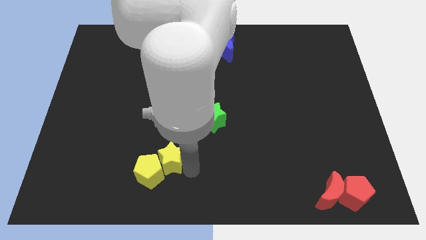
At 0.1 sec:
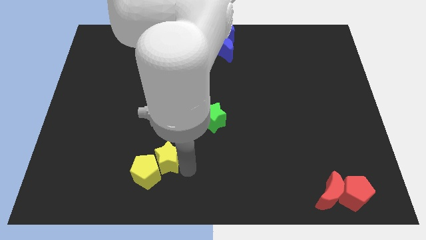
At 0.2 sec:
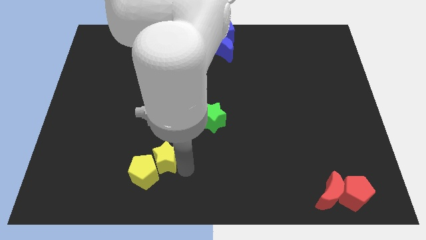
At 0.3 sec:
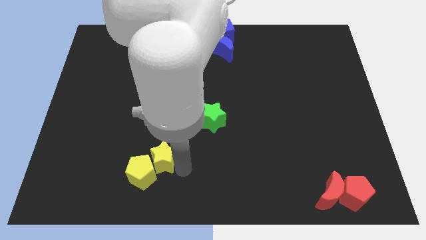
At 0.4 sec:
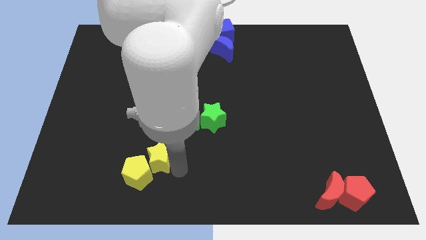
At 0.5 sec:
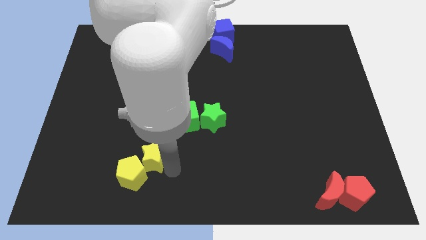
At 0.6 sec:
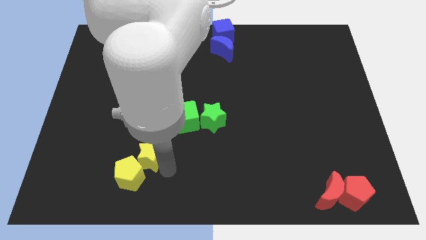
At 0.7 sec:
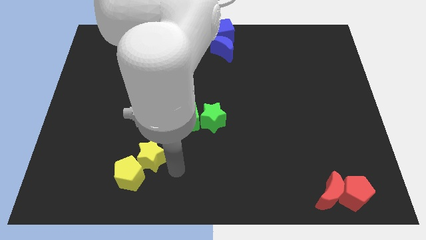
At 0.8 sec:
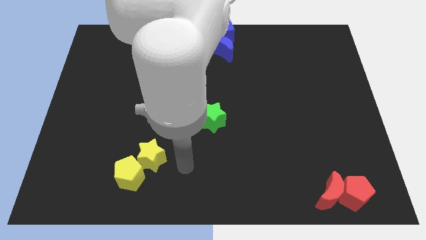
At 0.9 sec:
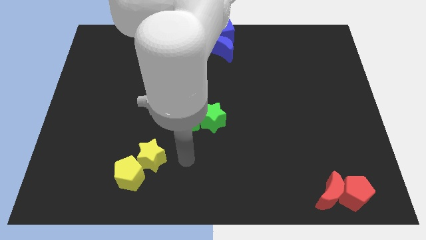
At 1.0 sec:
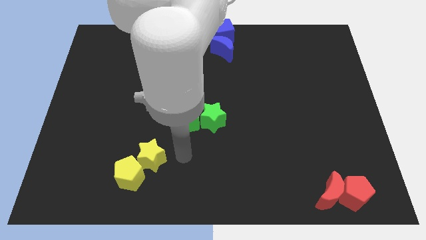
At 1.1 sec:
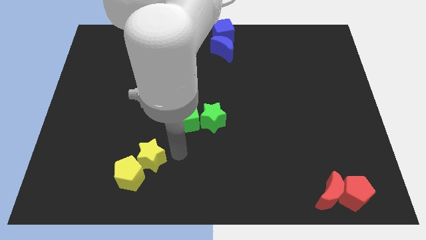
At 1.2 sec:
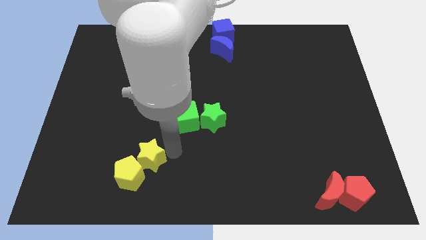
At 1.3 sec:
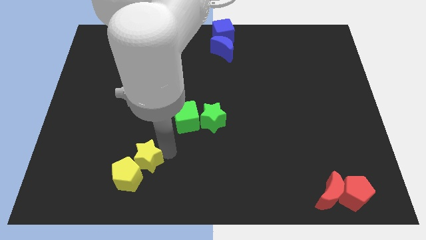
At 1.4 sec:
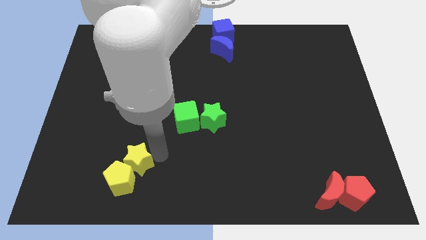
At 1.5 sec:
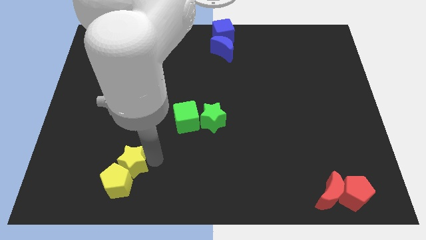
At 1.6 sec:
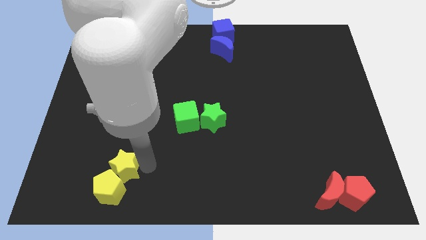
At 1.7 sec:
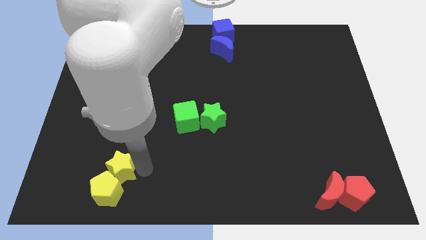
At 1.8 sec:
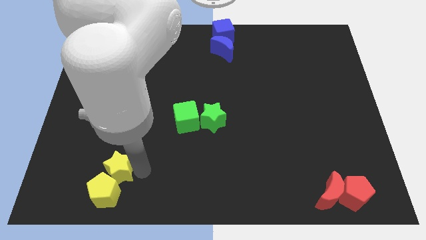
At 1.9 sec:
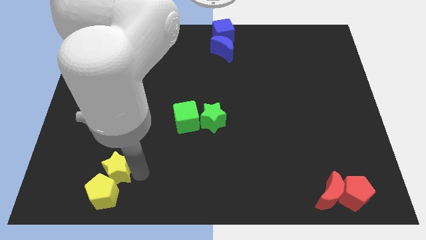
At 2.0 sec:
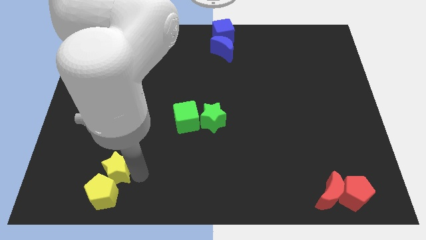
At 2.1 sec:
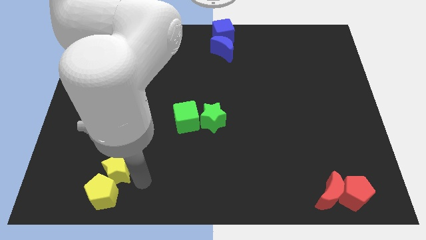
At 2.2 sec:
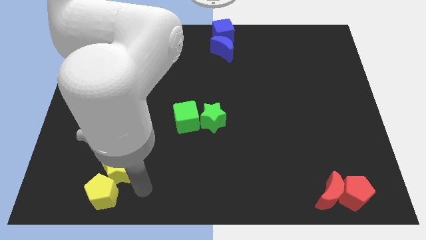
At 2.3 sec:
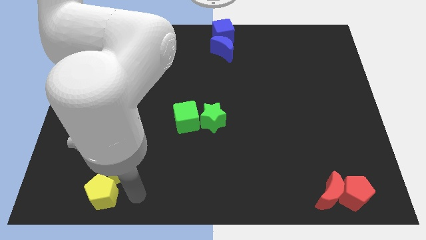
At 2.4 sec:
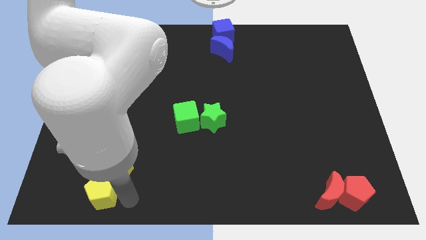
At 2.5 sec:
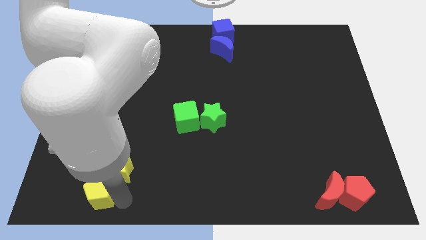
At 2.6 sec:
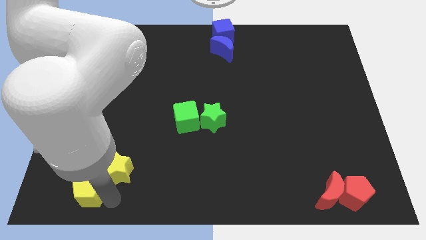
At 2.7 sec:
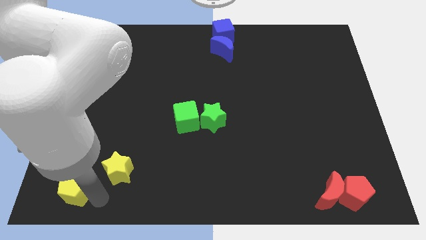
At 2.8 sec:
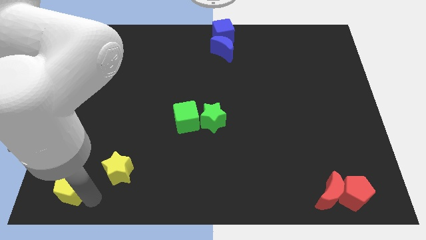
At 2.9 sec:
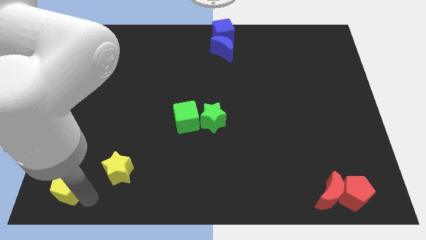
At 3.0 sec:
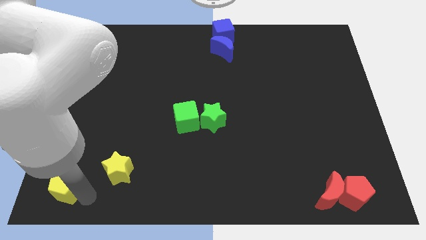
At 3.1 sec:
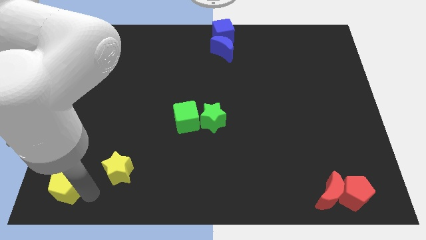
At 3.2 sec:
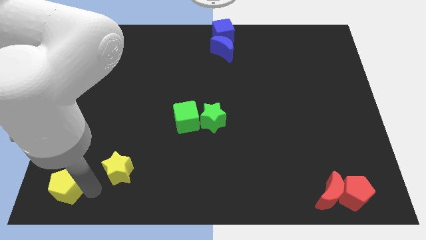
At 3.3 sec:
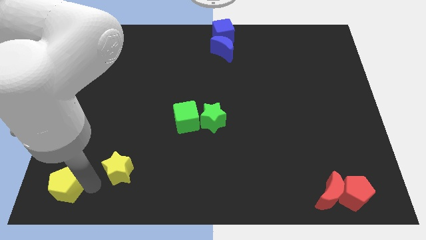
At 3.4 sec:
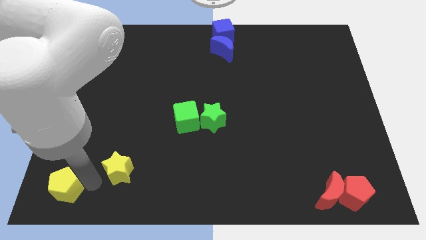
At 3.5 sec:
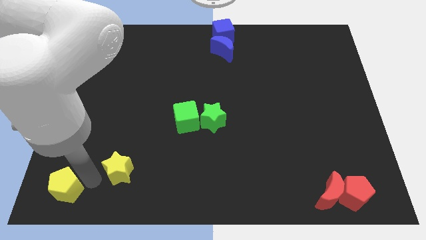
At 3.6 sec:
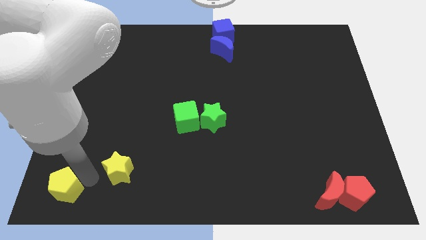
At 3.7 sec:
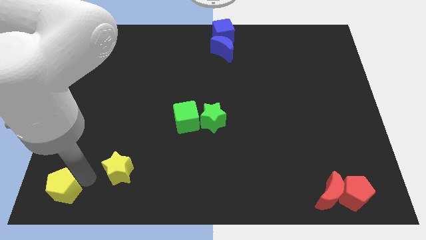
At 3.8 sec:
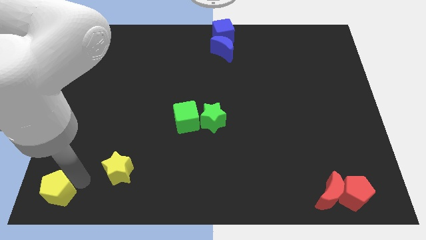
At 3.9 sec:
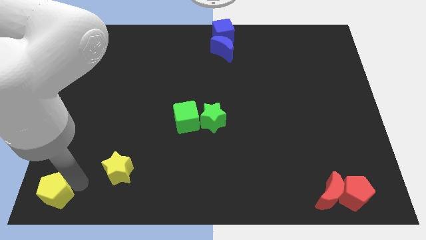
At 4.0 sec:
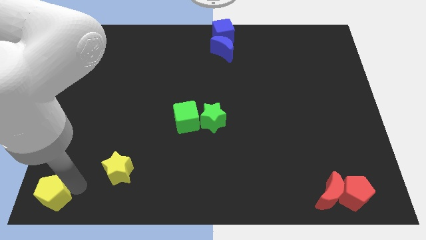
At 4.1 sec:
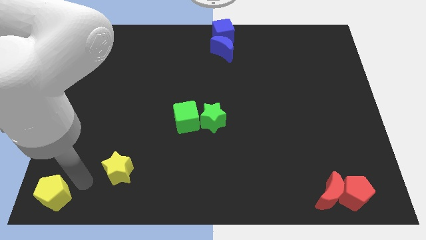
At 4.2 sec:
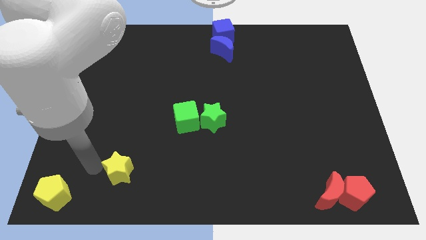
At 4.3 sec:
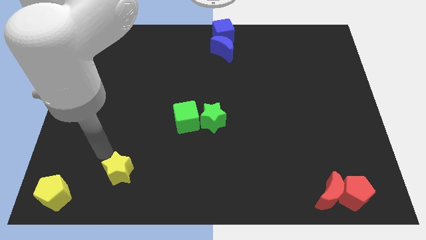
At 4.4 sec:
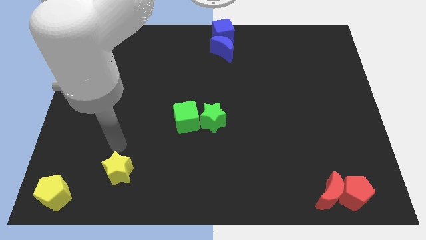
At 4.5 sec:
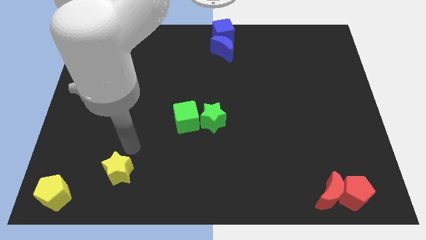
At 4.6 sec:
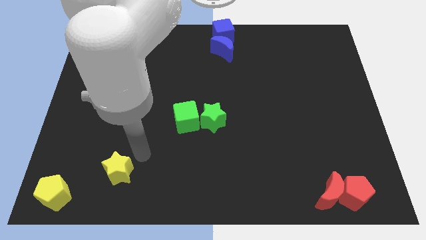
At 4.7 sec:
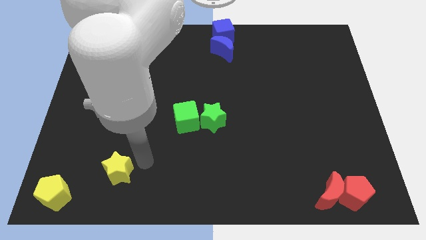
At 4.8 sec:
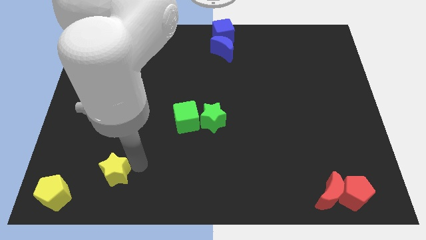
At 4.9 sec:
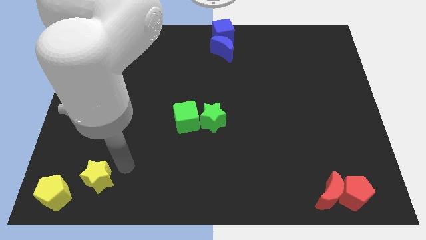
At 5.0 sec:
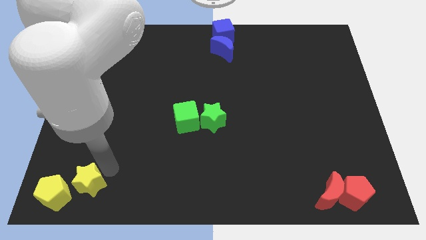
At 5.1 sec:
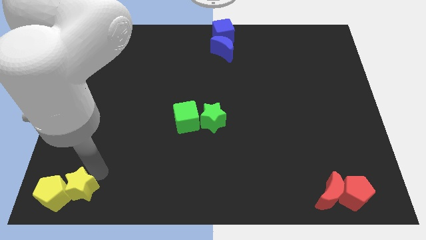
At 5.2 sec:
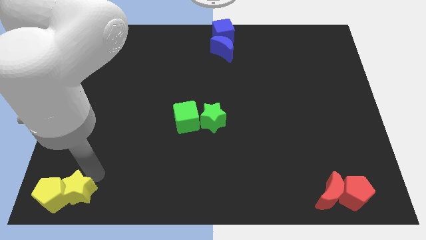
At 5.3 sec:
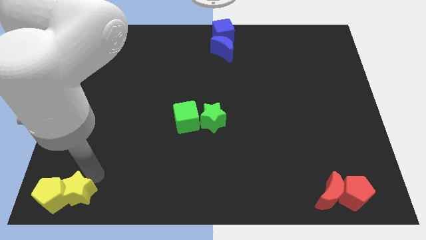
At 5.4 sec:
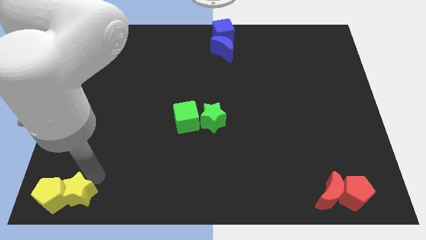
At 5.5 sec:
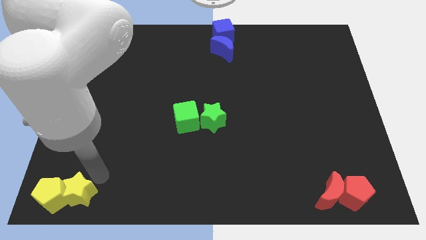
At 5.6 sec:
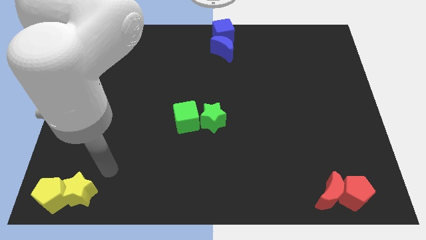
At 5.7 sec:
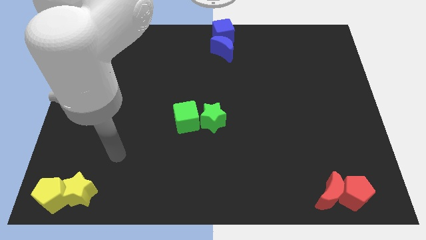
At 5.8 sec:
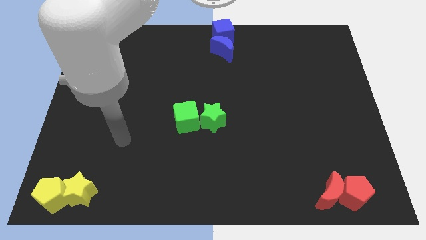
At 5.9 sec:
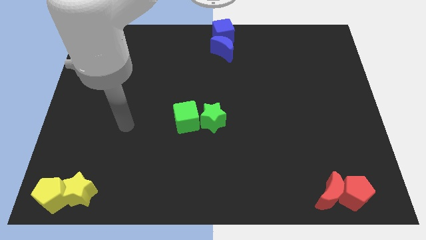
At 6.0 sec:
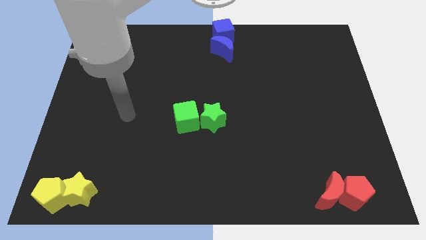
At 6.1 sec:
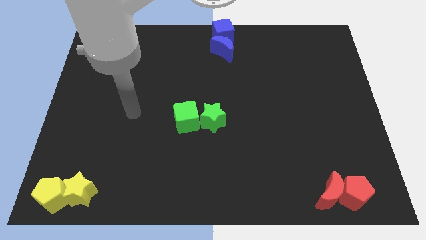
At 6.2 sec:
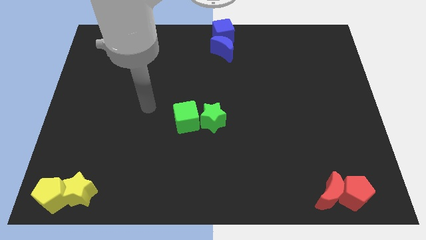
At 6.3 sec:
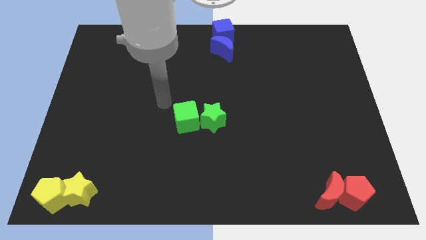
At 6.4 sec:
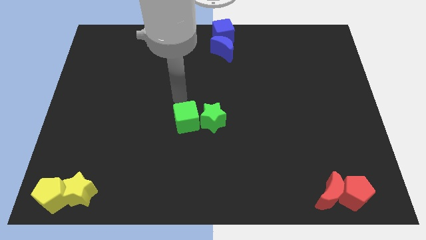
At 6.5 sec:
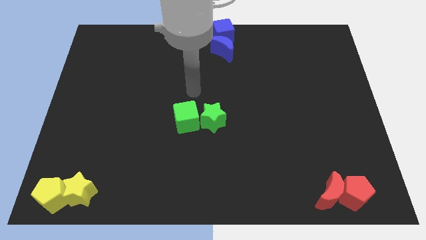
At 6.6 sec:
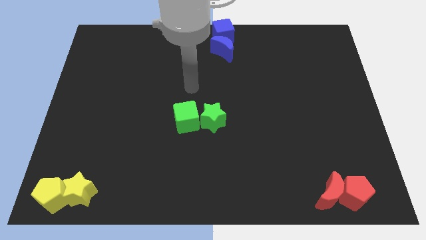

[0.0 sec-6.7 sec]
move the yellow pentagon and star to the bottom left corner

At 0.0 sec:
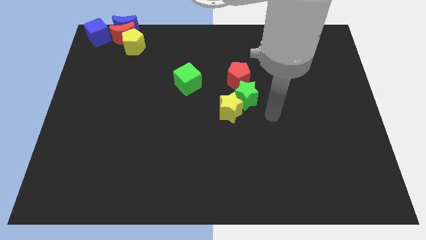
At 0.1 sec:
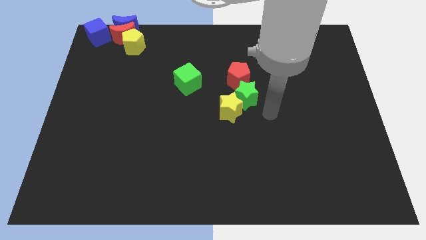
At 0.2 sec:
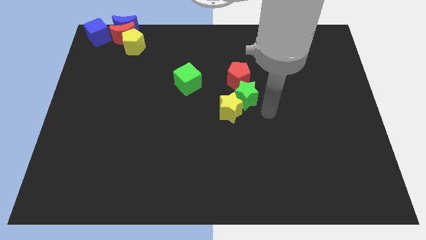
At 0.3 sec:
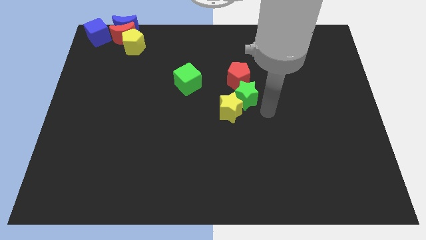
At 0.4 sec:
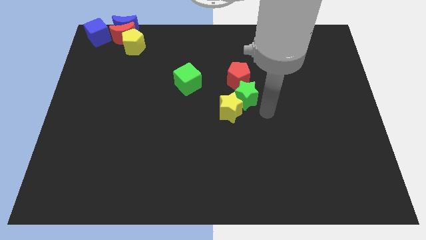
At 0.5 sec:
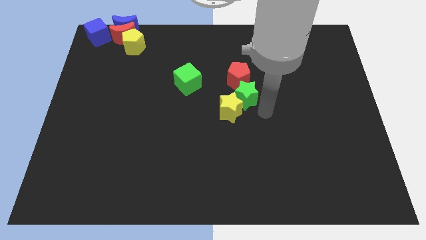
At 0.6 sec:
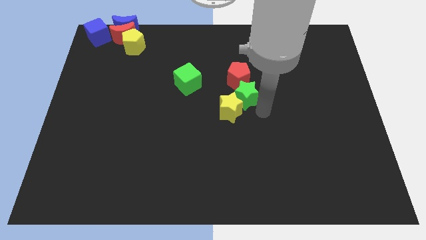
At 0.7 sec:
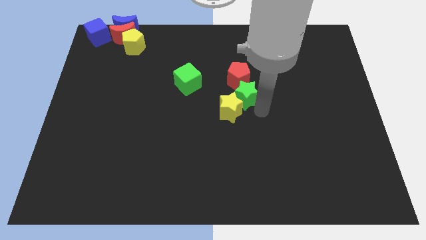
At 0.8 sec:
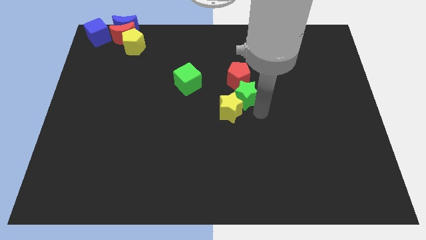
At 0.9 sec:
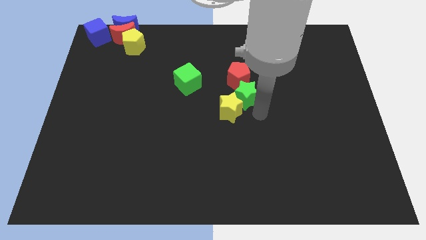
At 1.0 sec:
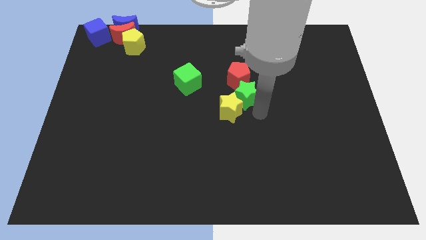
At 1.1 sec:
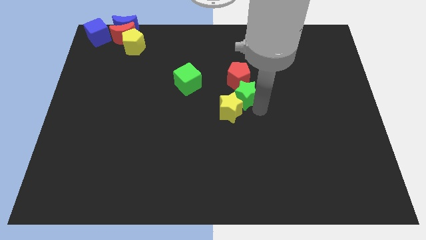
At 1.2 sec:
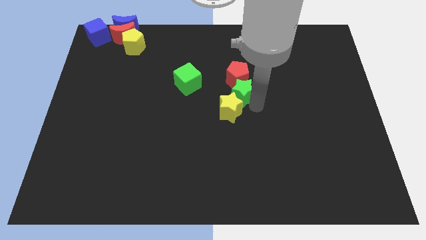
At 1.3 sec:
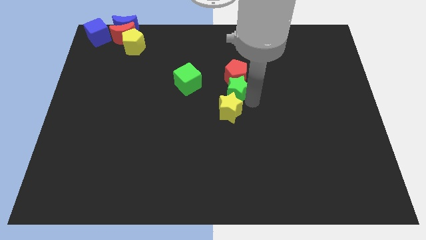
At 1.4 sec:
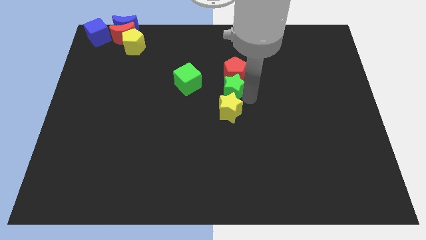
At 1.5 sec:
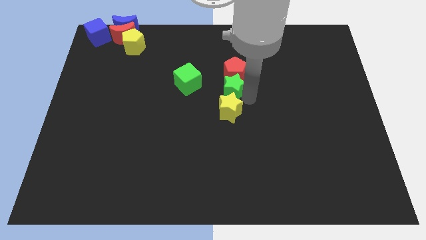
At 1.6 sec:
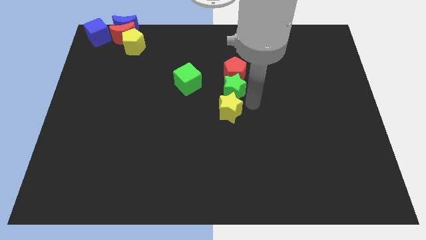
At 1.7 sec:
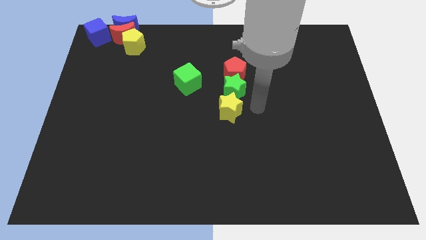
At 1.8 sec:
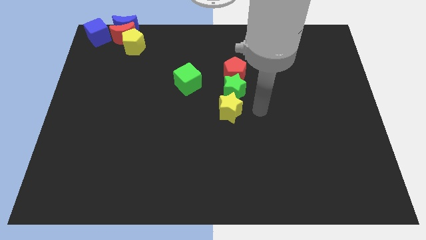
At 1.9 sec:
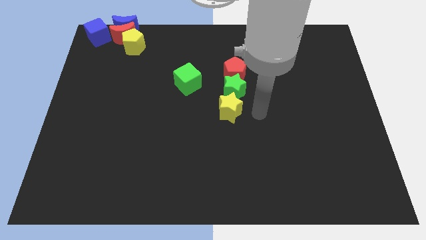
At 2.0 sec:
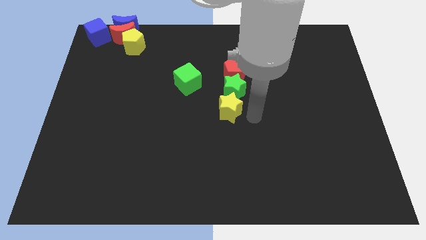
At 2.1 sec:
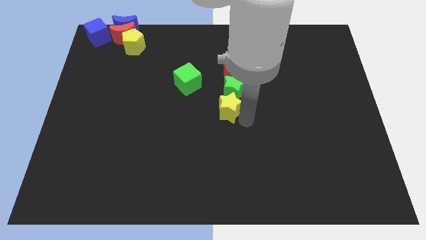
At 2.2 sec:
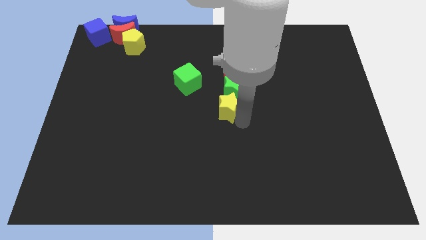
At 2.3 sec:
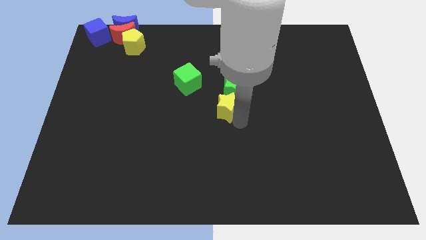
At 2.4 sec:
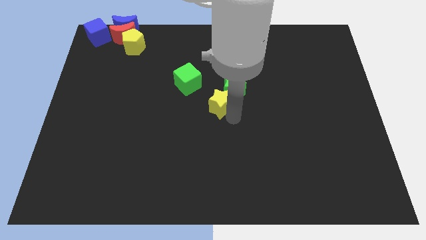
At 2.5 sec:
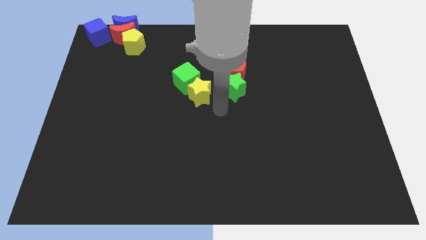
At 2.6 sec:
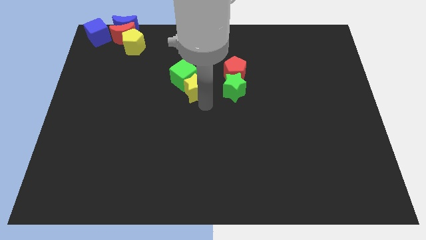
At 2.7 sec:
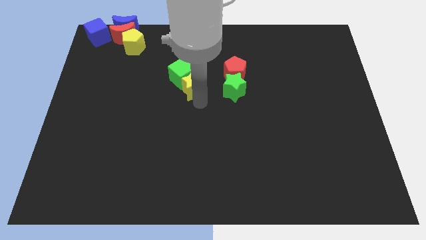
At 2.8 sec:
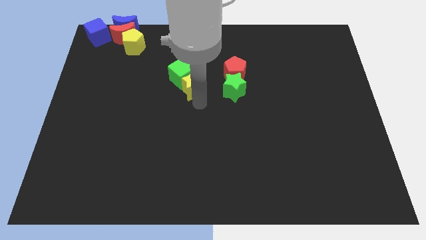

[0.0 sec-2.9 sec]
slide the yellow star close to green cube
